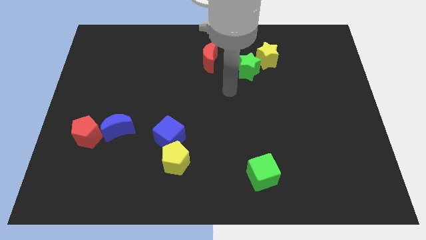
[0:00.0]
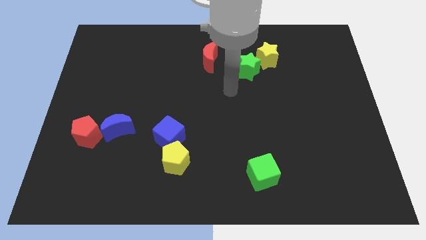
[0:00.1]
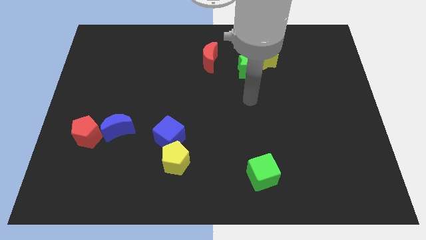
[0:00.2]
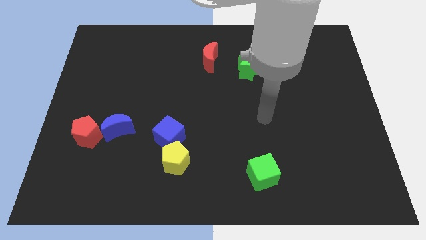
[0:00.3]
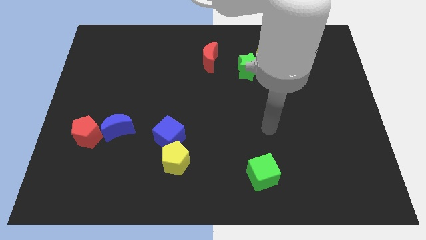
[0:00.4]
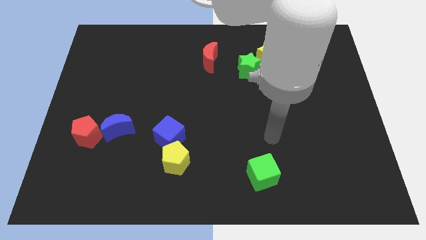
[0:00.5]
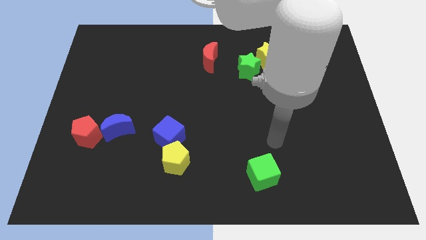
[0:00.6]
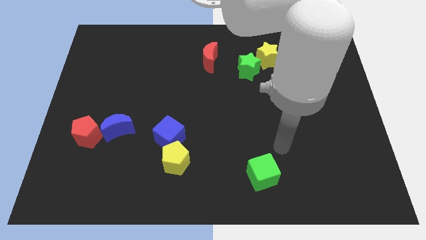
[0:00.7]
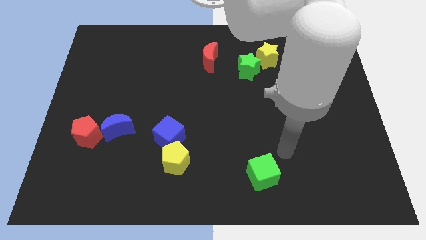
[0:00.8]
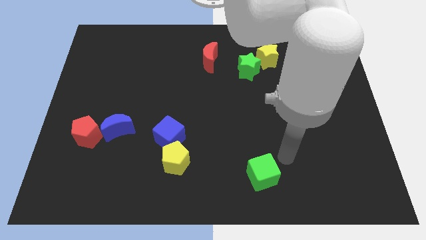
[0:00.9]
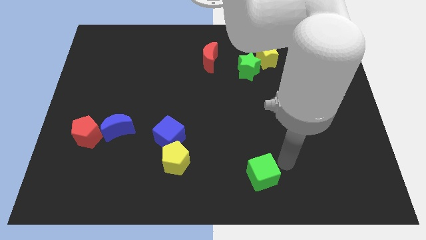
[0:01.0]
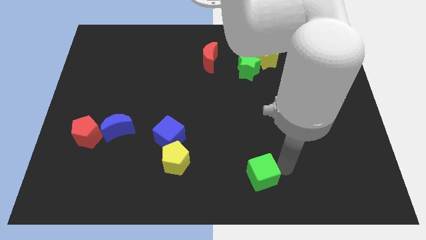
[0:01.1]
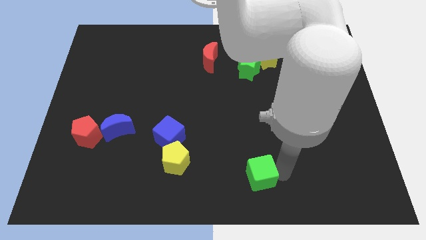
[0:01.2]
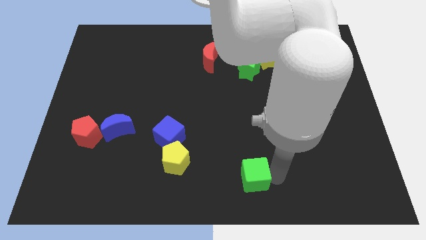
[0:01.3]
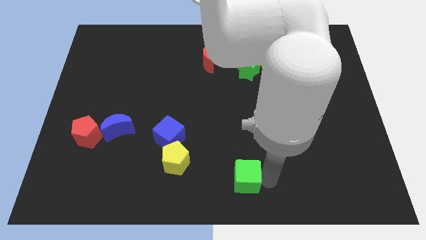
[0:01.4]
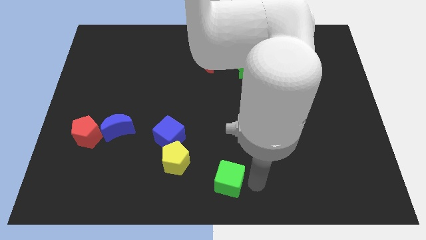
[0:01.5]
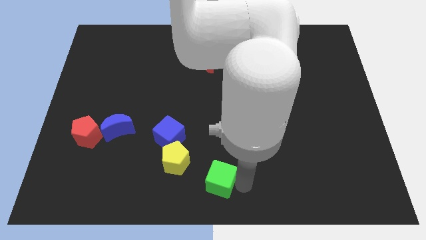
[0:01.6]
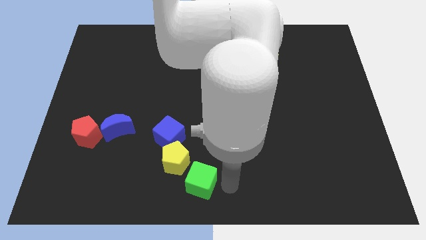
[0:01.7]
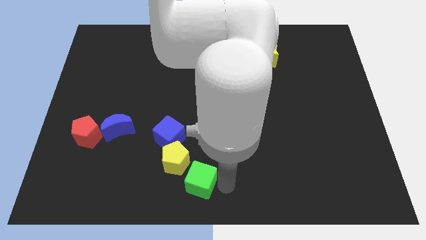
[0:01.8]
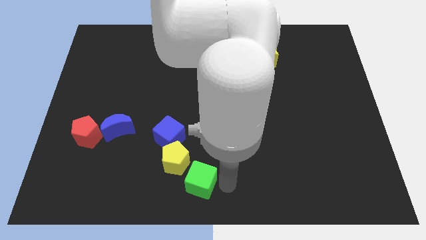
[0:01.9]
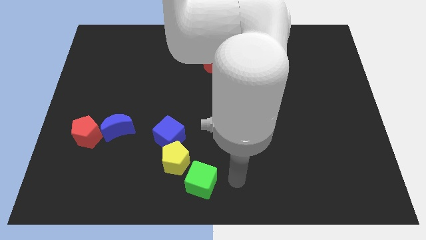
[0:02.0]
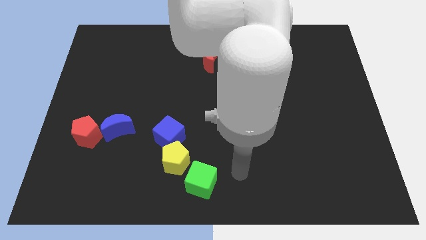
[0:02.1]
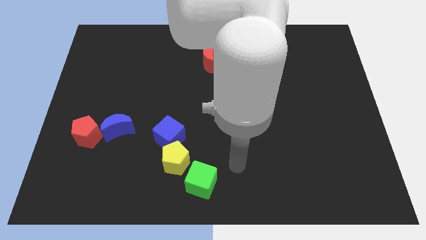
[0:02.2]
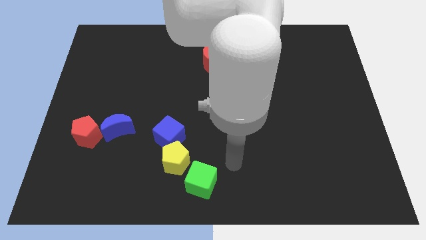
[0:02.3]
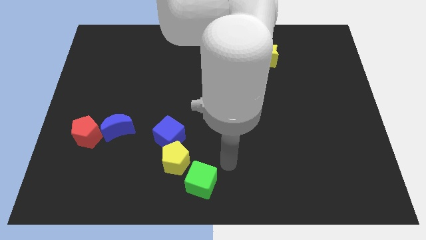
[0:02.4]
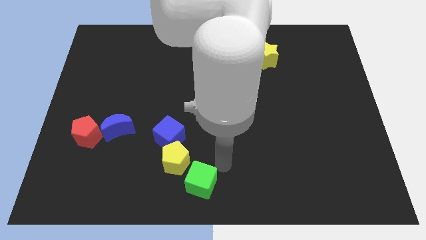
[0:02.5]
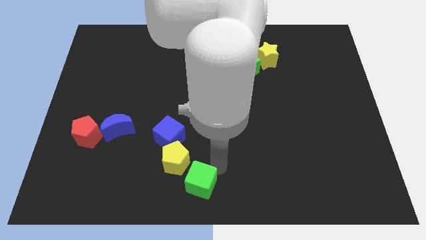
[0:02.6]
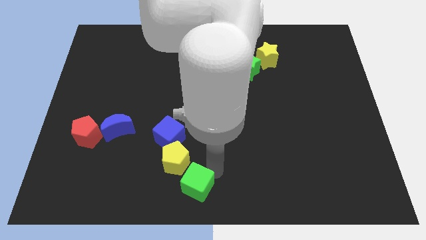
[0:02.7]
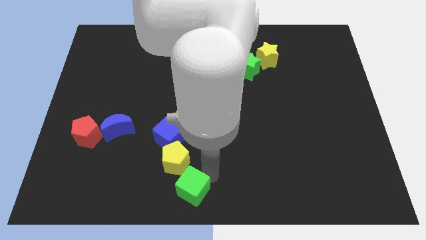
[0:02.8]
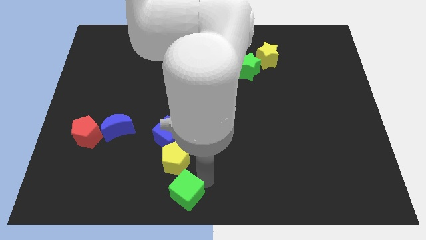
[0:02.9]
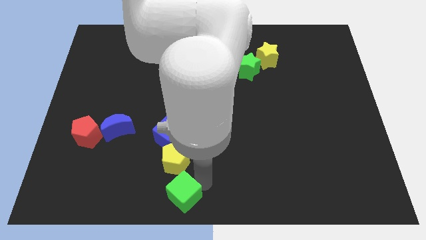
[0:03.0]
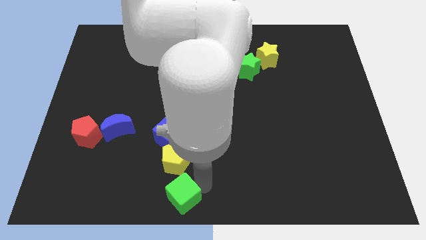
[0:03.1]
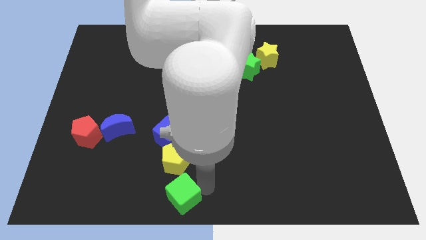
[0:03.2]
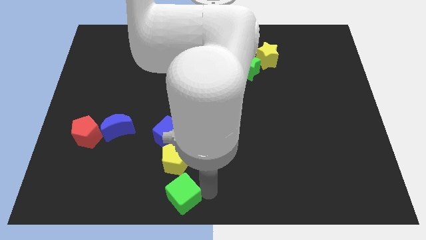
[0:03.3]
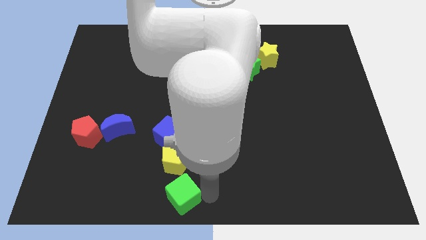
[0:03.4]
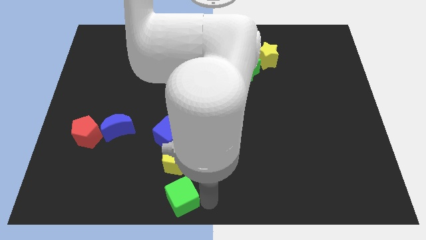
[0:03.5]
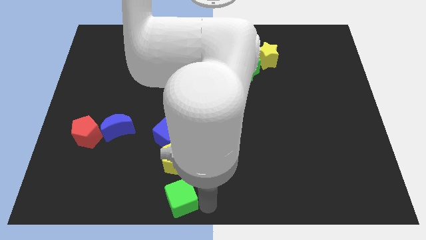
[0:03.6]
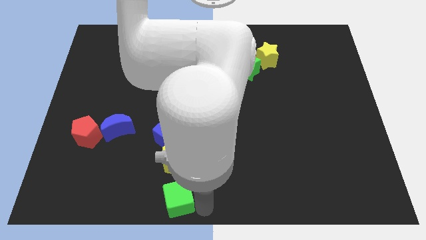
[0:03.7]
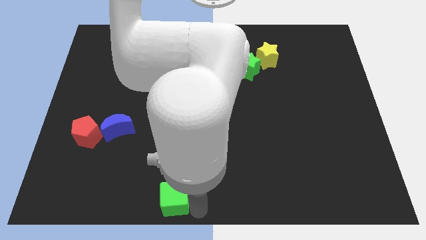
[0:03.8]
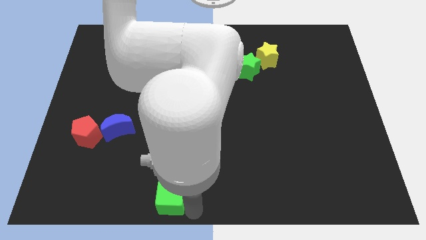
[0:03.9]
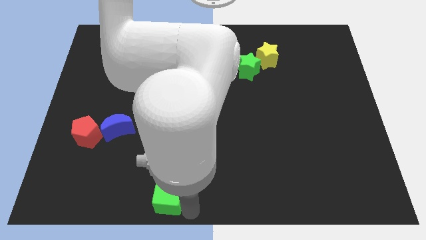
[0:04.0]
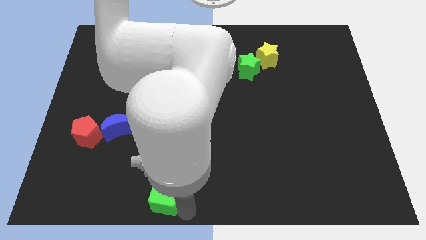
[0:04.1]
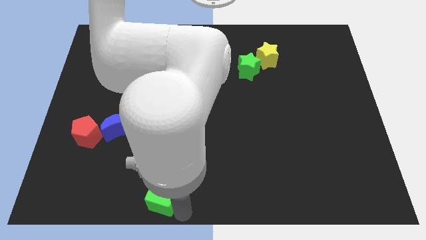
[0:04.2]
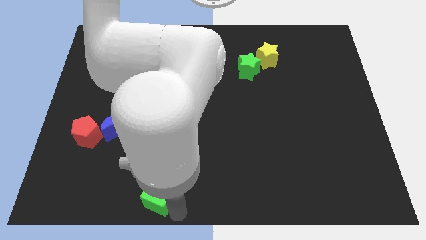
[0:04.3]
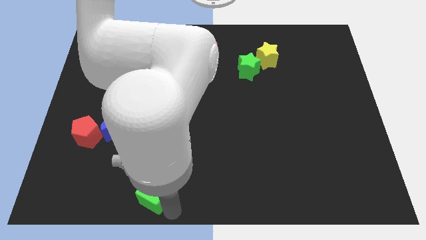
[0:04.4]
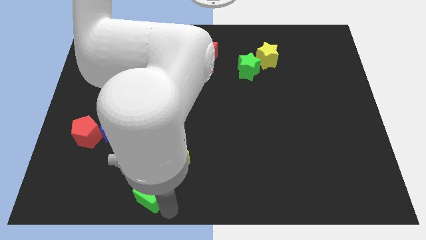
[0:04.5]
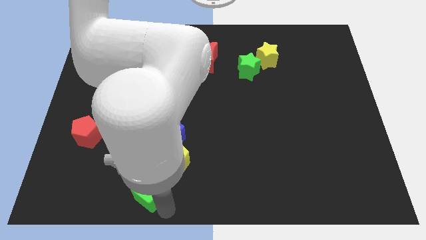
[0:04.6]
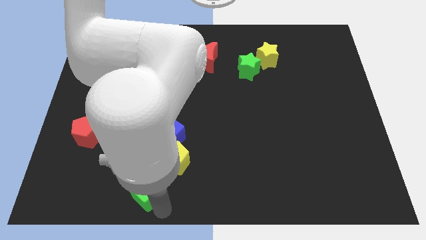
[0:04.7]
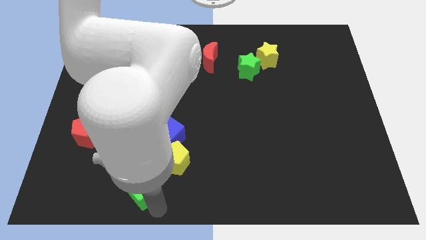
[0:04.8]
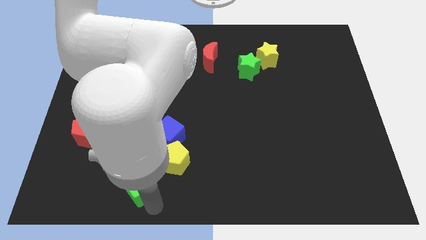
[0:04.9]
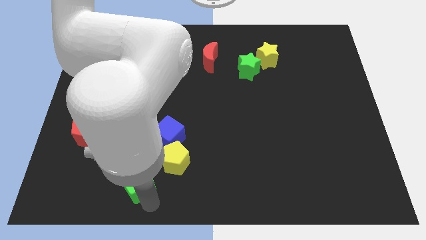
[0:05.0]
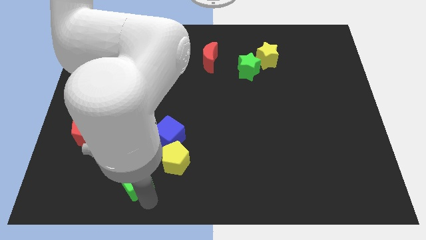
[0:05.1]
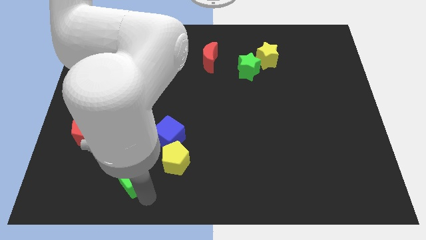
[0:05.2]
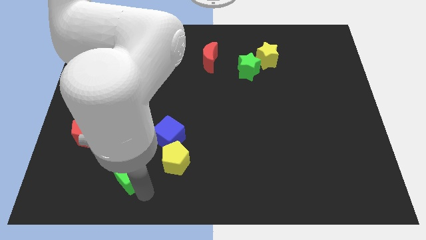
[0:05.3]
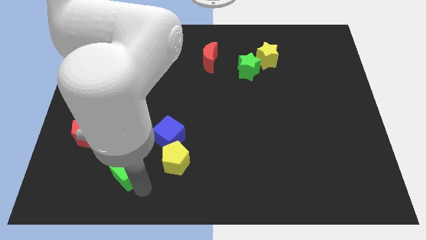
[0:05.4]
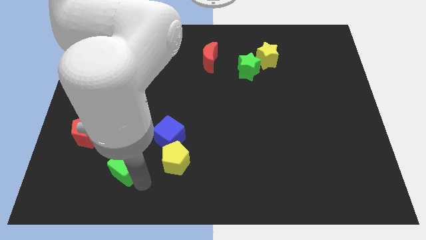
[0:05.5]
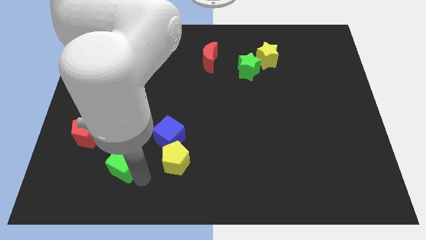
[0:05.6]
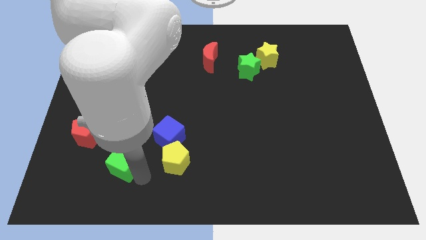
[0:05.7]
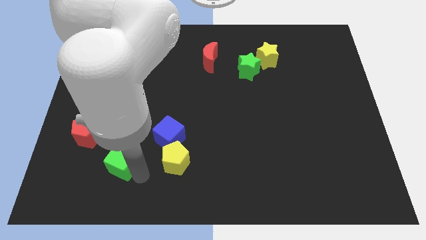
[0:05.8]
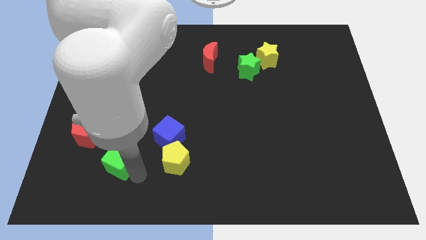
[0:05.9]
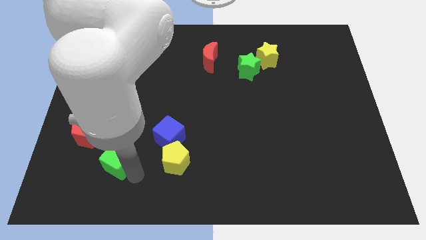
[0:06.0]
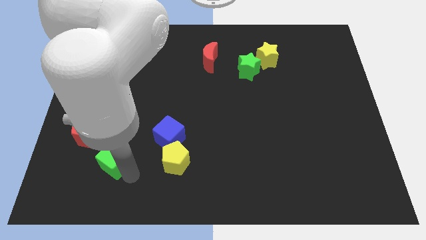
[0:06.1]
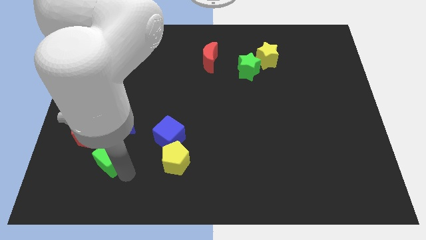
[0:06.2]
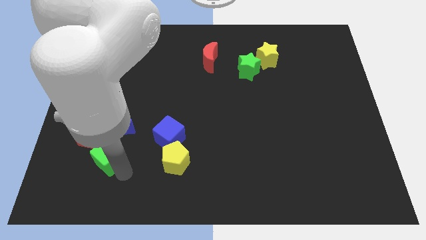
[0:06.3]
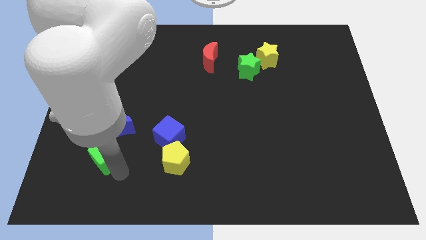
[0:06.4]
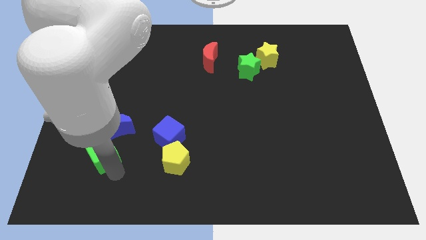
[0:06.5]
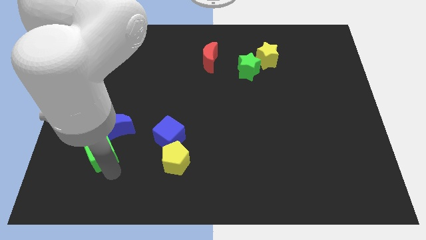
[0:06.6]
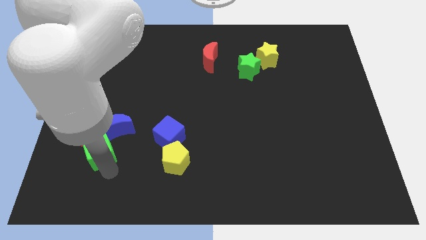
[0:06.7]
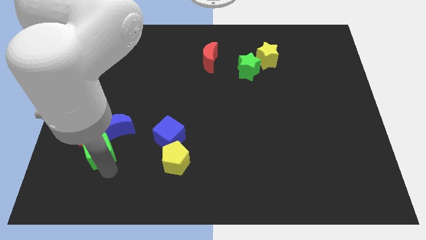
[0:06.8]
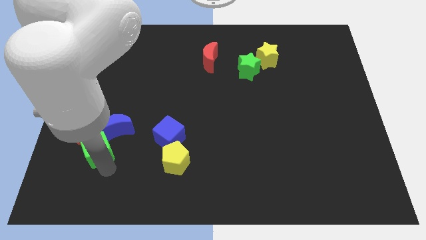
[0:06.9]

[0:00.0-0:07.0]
move the green cube close to the red pentagon

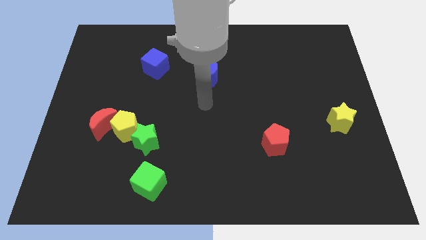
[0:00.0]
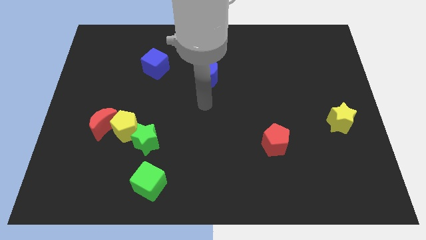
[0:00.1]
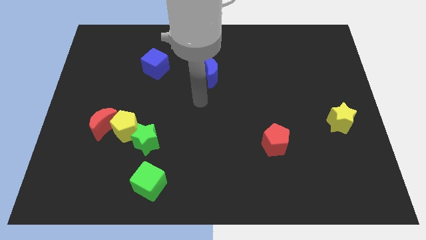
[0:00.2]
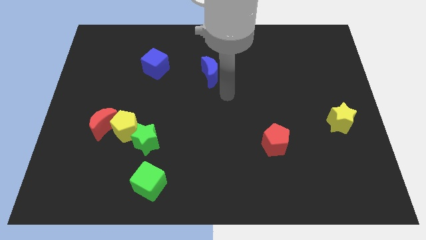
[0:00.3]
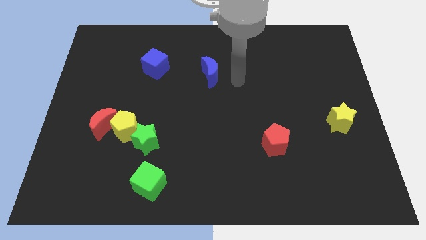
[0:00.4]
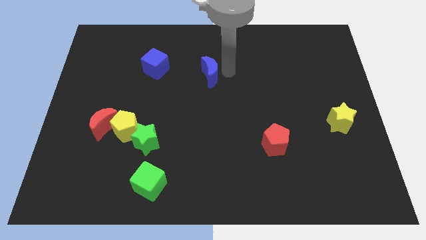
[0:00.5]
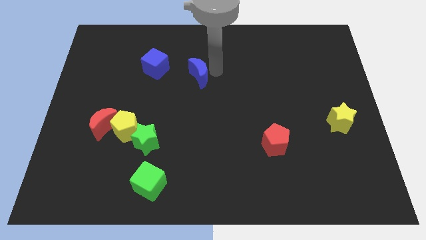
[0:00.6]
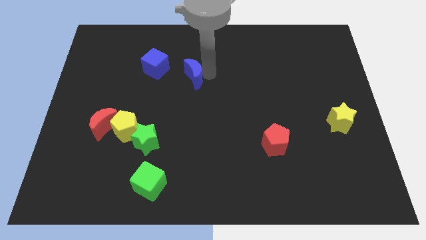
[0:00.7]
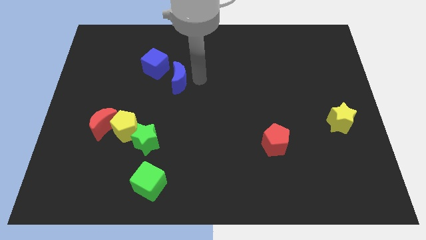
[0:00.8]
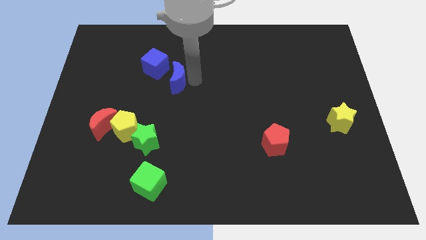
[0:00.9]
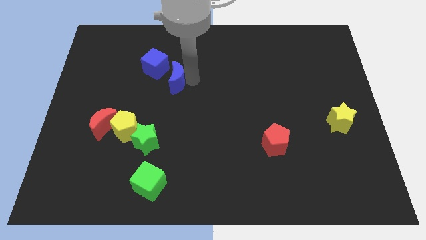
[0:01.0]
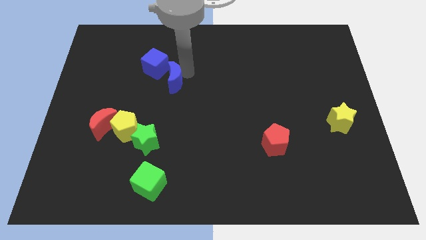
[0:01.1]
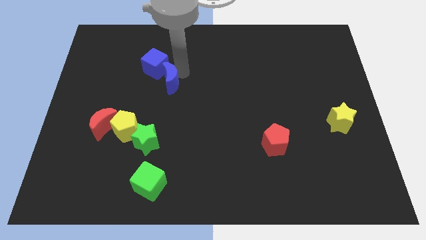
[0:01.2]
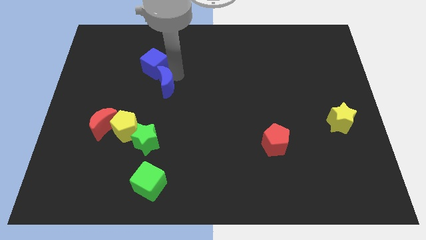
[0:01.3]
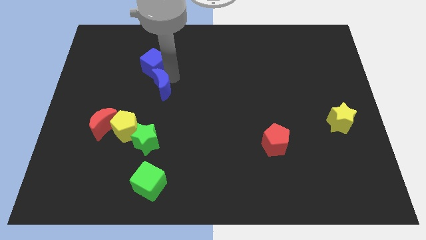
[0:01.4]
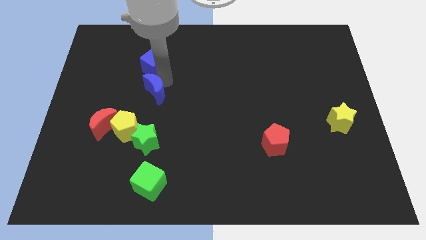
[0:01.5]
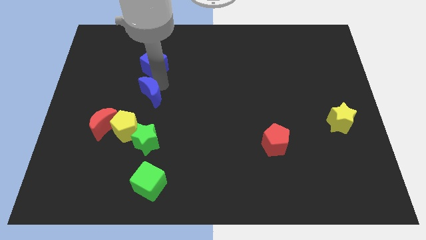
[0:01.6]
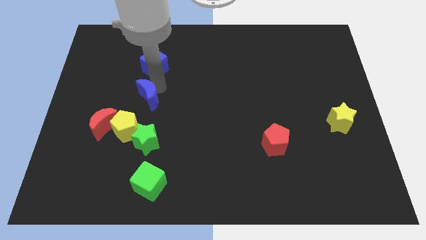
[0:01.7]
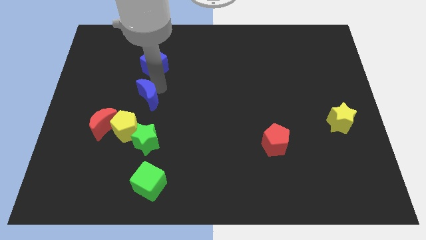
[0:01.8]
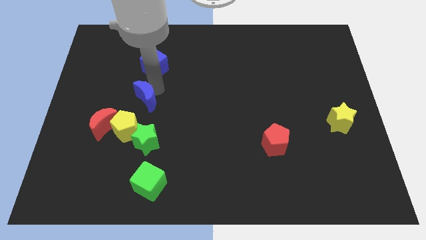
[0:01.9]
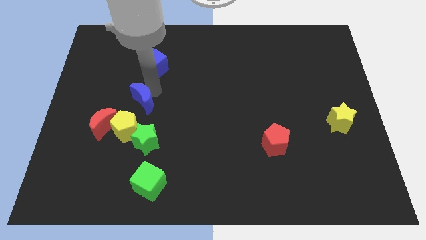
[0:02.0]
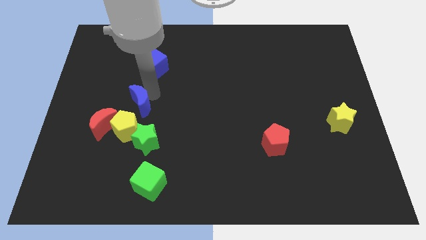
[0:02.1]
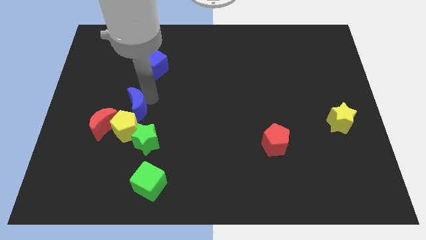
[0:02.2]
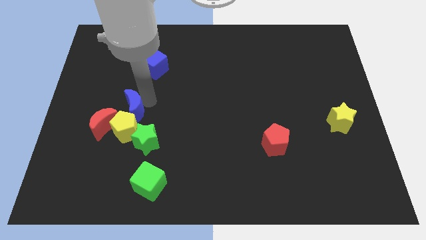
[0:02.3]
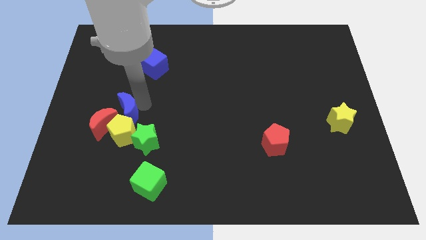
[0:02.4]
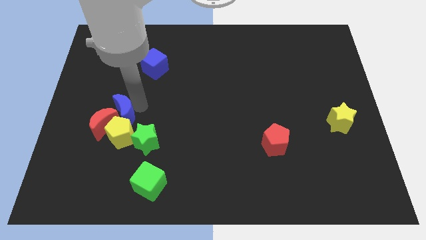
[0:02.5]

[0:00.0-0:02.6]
slide the blue moon towards the yellow pentagon
